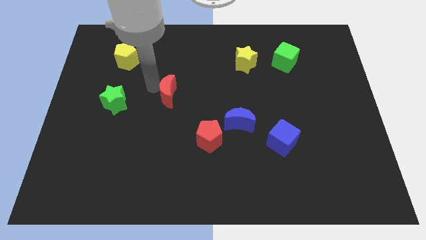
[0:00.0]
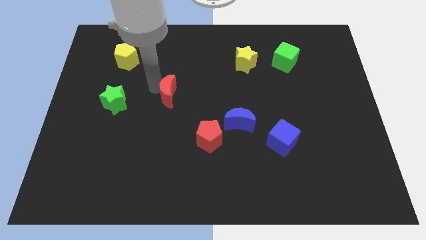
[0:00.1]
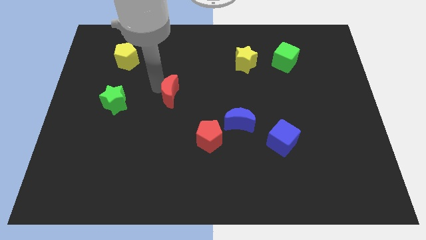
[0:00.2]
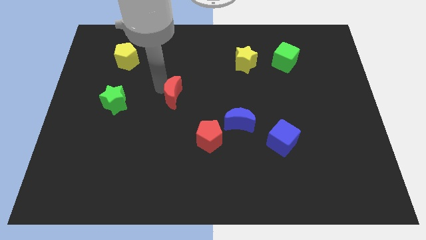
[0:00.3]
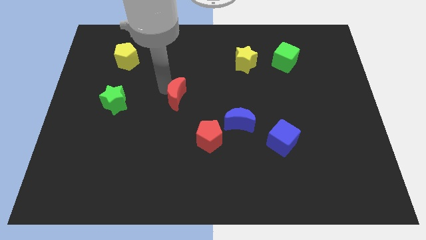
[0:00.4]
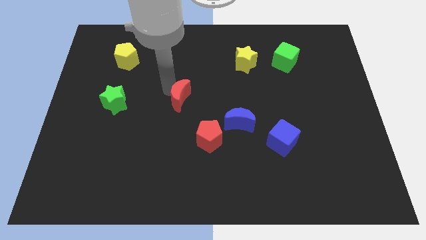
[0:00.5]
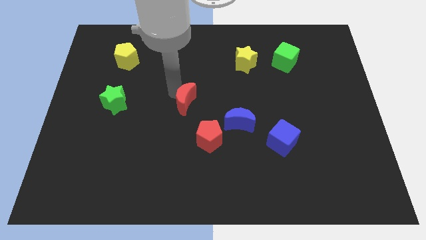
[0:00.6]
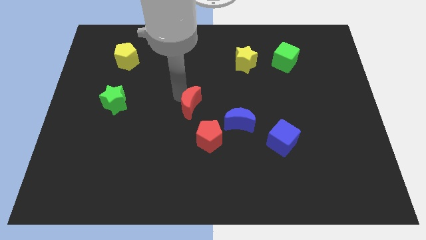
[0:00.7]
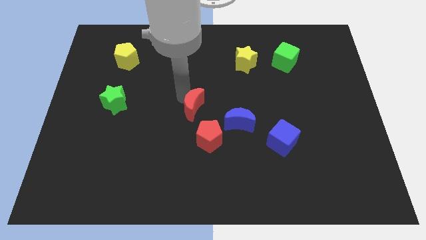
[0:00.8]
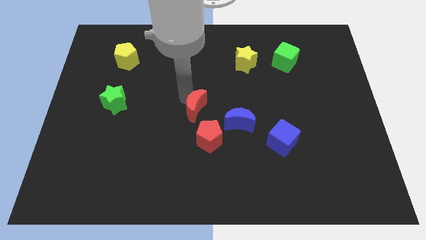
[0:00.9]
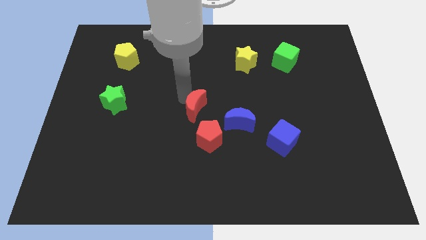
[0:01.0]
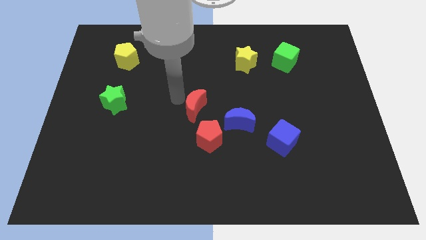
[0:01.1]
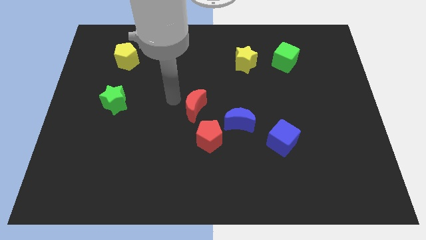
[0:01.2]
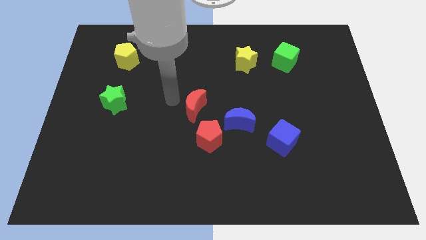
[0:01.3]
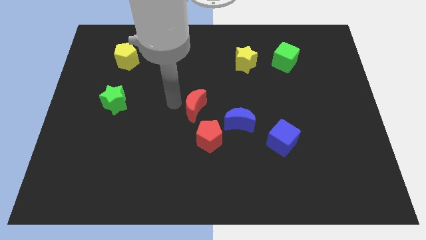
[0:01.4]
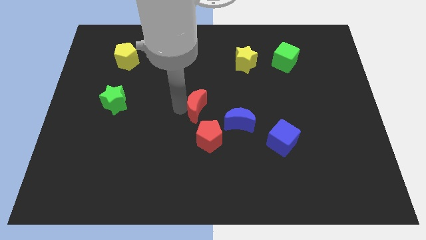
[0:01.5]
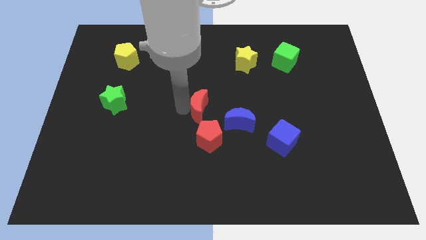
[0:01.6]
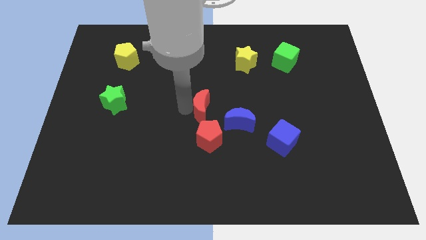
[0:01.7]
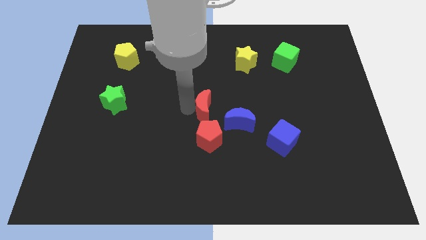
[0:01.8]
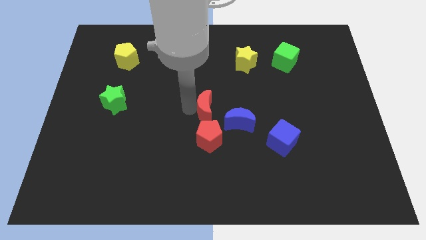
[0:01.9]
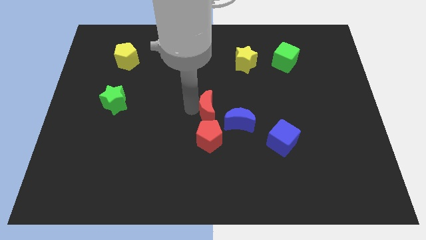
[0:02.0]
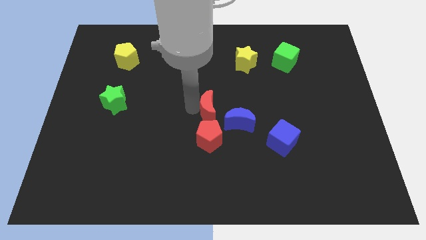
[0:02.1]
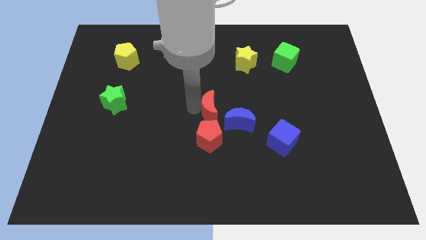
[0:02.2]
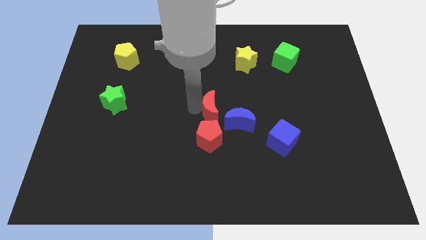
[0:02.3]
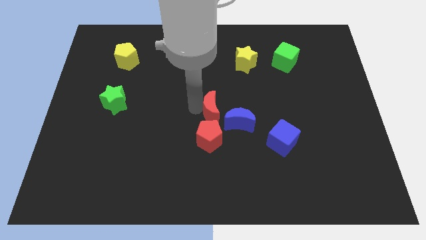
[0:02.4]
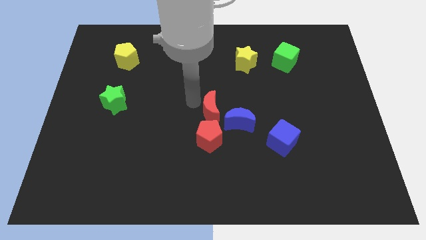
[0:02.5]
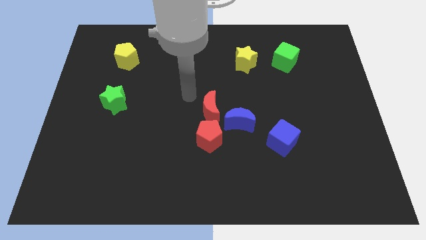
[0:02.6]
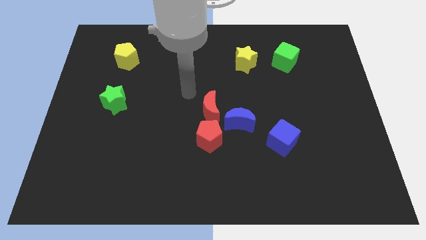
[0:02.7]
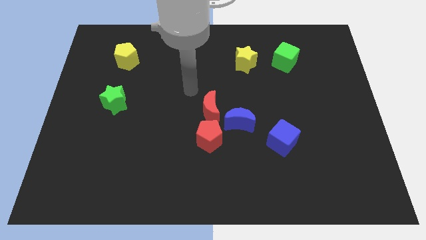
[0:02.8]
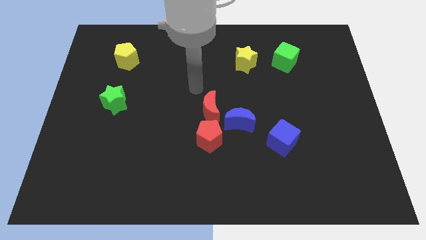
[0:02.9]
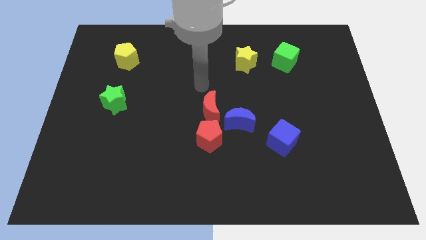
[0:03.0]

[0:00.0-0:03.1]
move the red crescent to the left side of blue moon

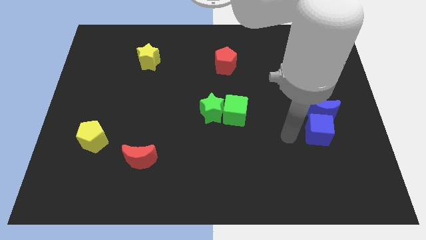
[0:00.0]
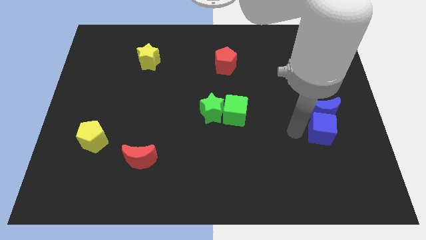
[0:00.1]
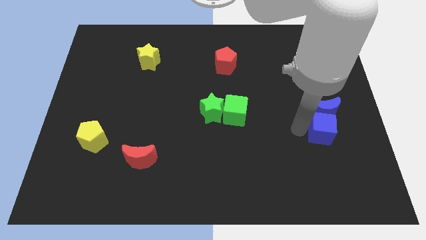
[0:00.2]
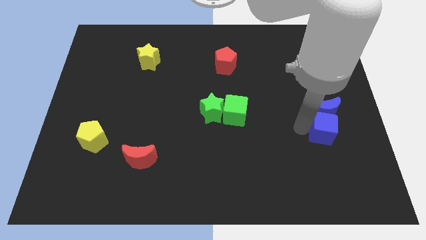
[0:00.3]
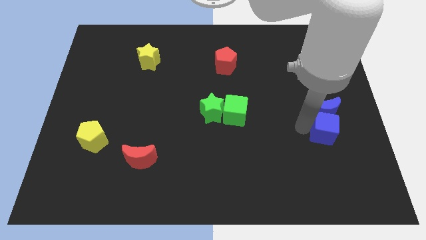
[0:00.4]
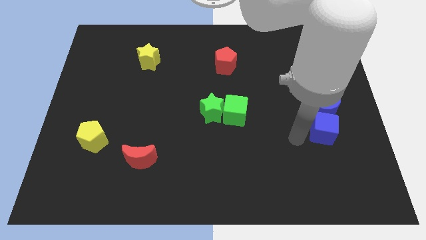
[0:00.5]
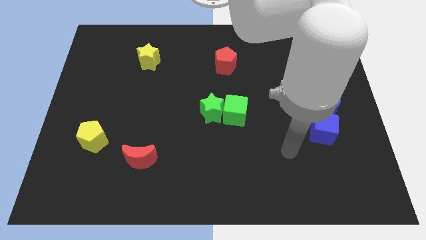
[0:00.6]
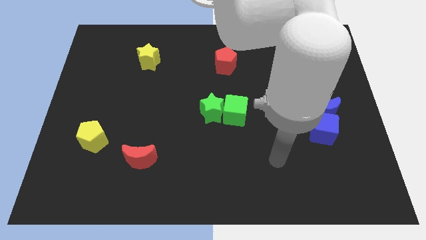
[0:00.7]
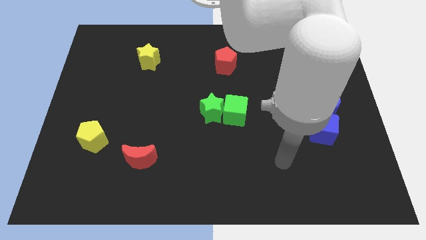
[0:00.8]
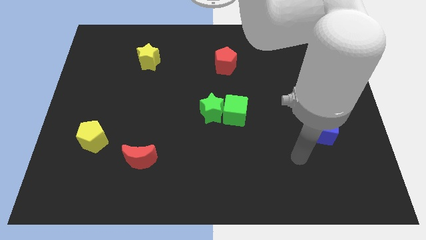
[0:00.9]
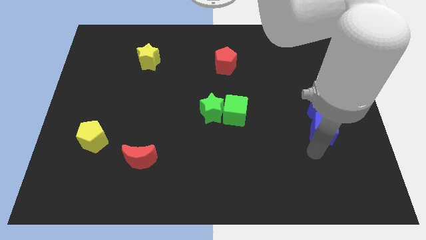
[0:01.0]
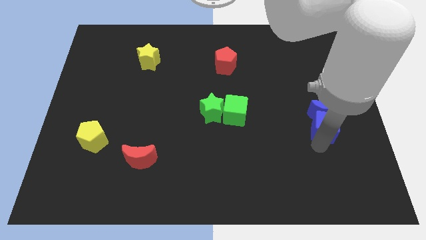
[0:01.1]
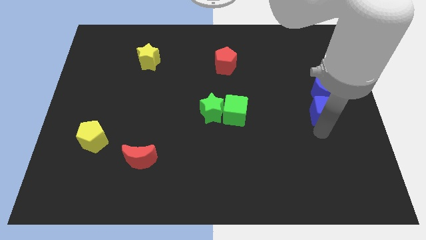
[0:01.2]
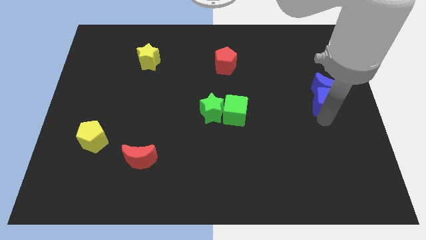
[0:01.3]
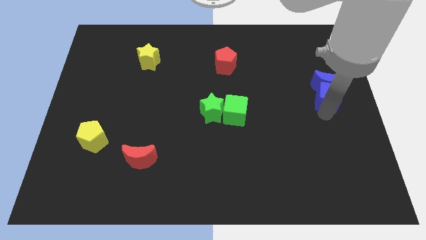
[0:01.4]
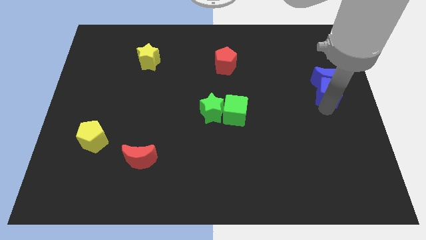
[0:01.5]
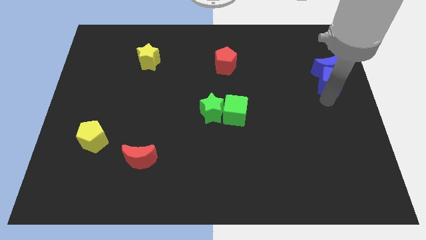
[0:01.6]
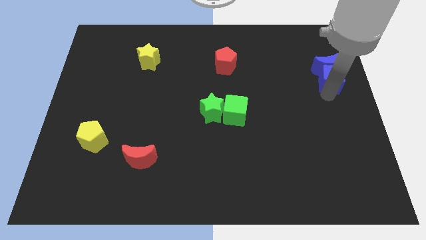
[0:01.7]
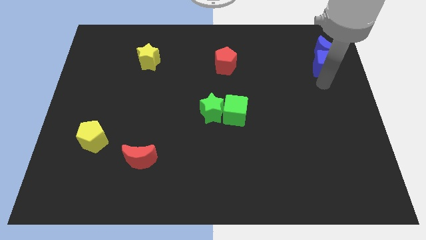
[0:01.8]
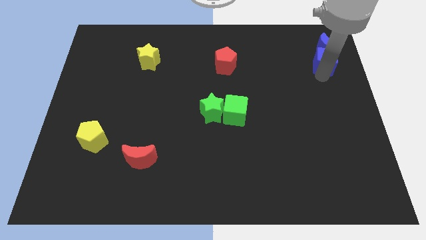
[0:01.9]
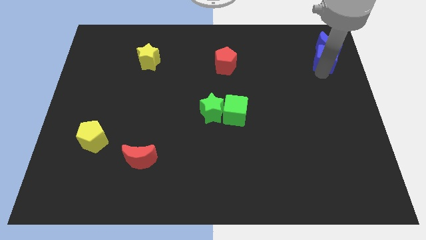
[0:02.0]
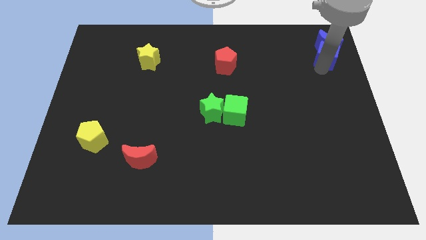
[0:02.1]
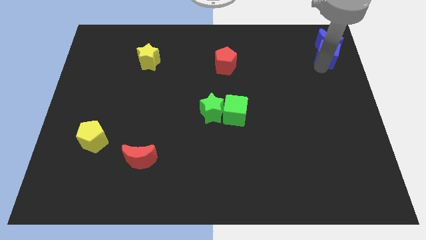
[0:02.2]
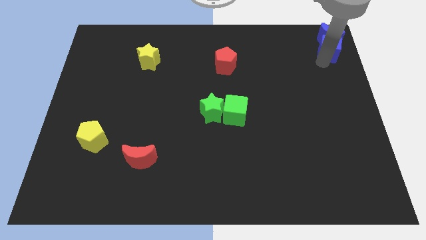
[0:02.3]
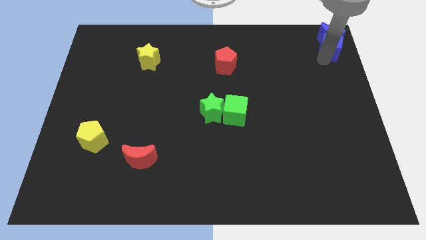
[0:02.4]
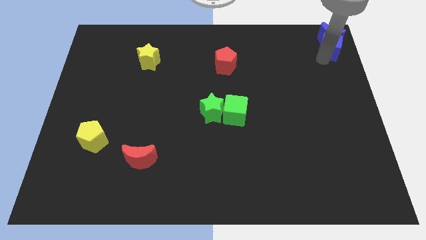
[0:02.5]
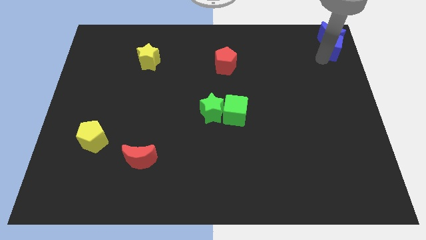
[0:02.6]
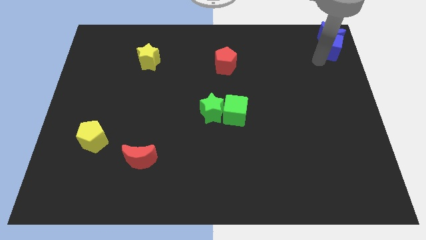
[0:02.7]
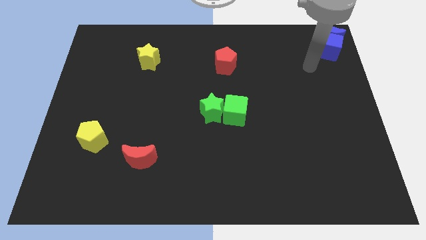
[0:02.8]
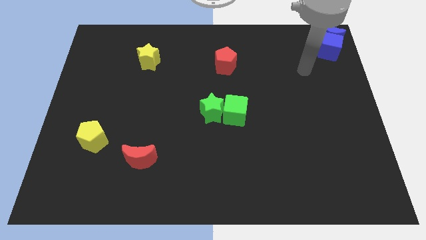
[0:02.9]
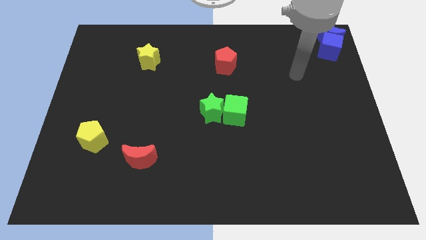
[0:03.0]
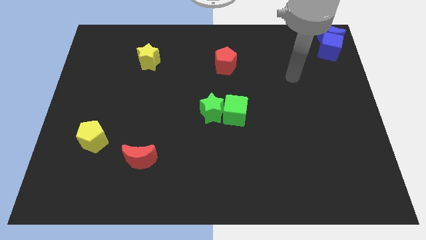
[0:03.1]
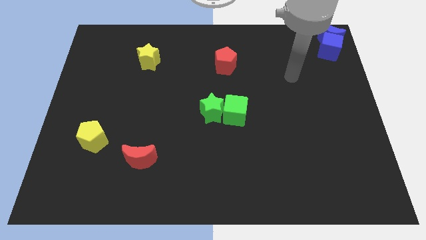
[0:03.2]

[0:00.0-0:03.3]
push the blue moon to the top right with a blue cube

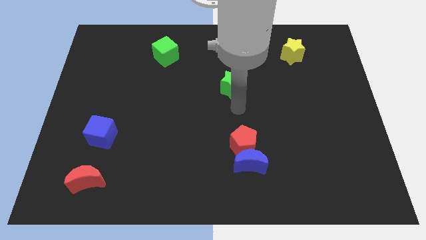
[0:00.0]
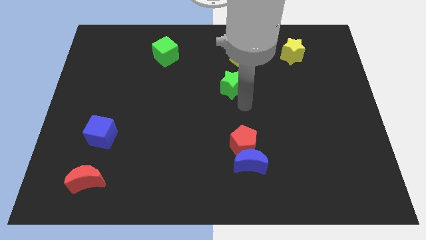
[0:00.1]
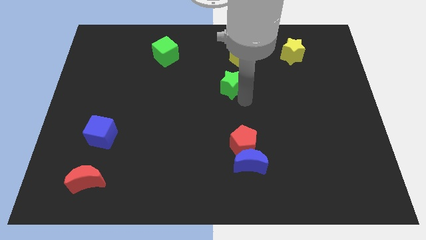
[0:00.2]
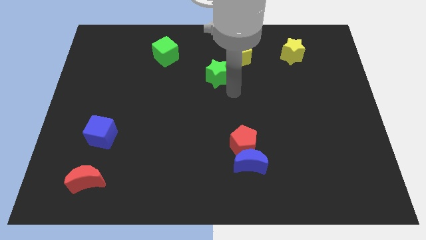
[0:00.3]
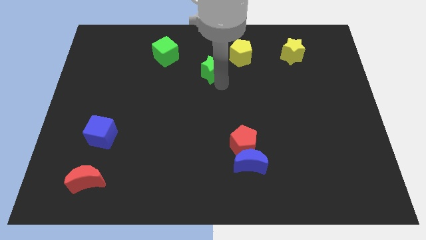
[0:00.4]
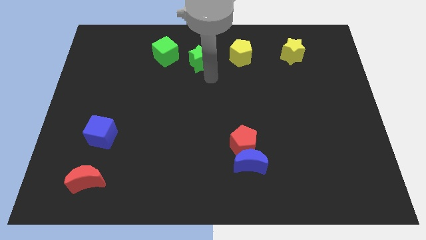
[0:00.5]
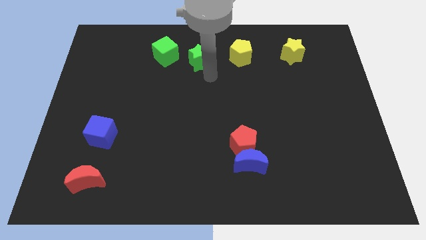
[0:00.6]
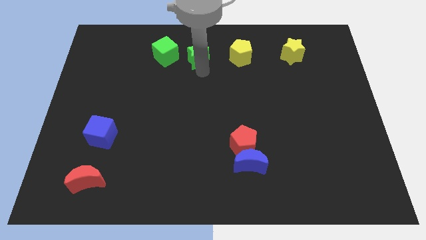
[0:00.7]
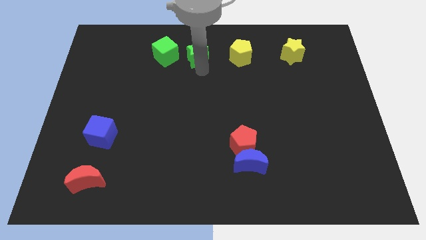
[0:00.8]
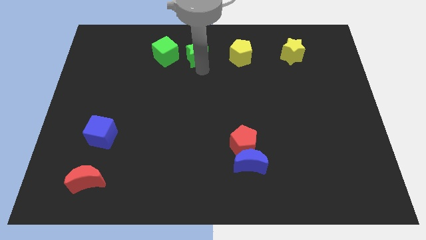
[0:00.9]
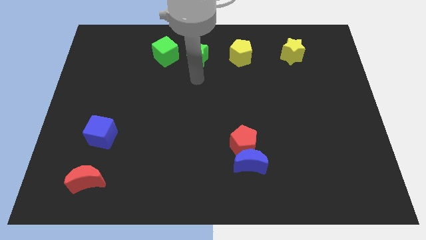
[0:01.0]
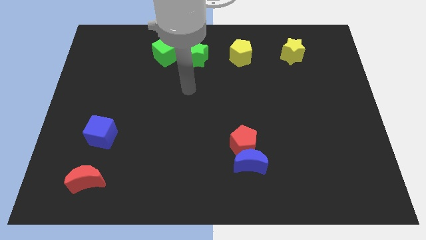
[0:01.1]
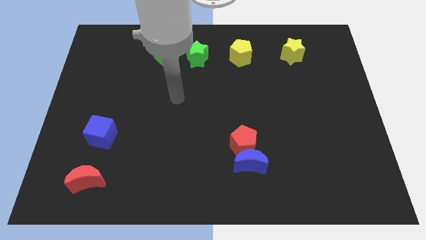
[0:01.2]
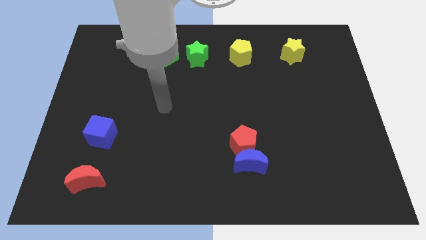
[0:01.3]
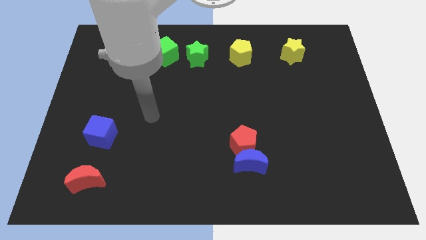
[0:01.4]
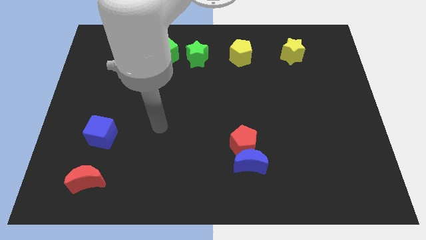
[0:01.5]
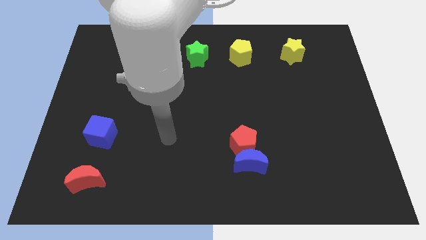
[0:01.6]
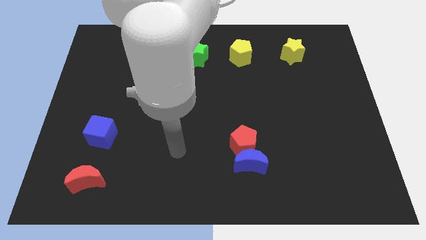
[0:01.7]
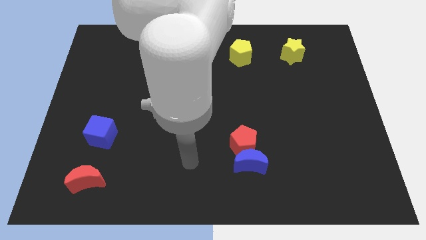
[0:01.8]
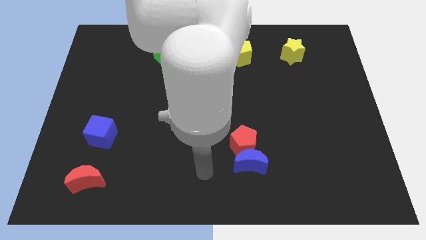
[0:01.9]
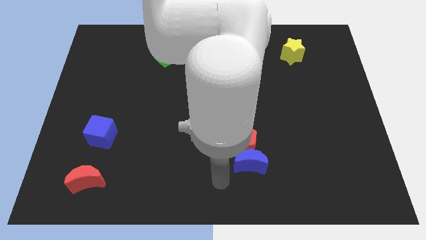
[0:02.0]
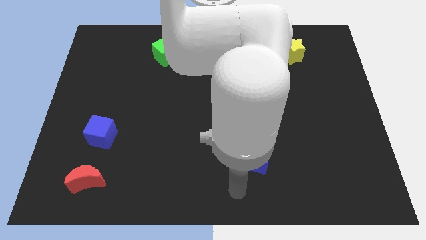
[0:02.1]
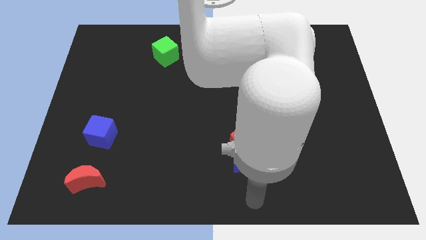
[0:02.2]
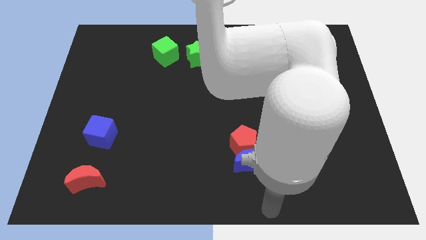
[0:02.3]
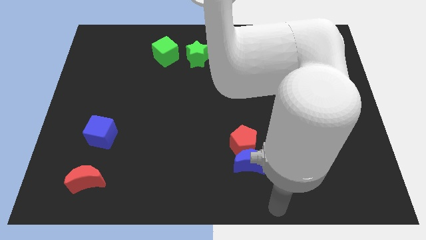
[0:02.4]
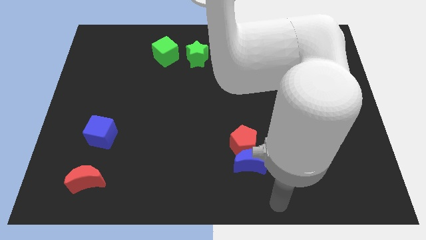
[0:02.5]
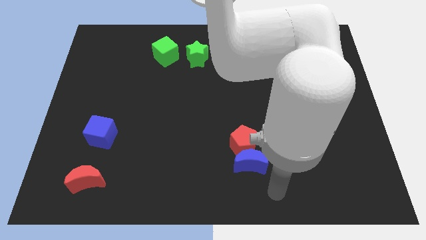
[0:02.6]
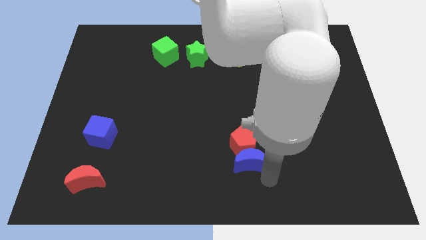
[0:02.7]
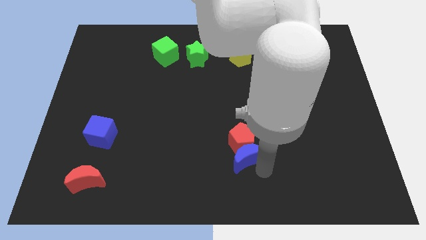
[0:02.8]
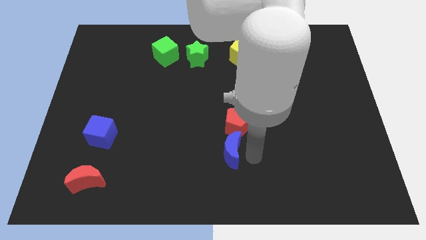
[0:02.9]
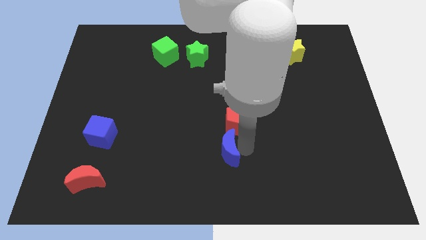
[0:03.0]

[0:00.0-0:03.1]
move the red pentagon to the center of the board
